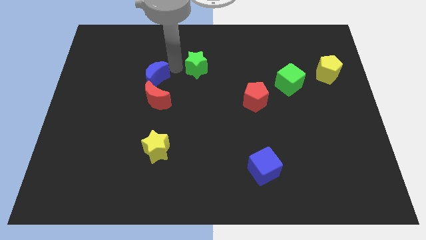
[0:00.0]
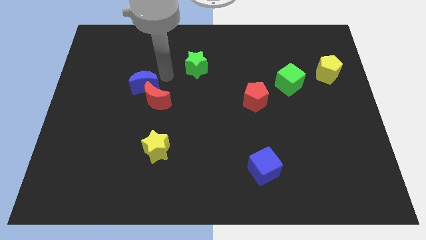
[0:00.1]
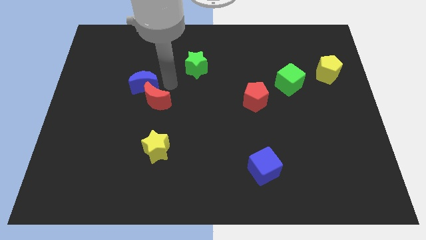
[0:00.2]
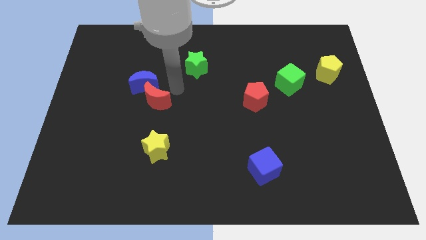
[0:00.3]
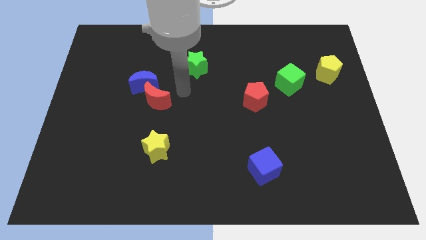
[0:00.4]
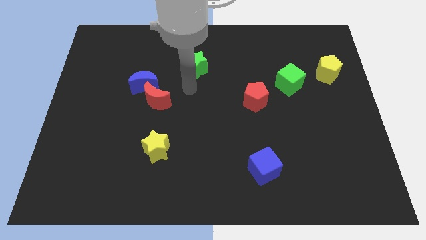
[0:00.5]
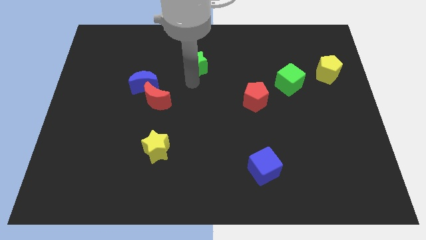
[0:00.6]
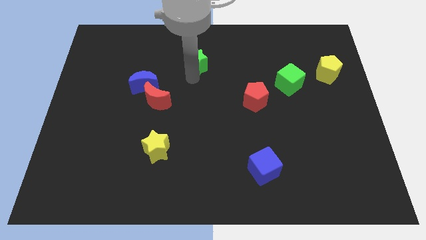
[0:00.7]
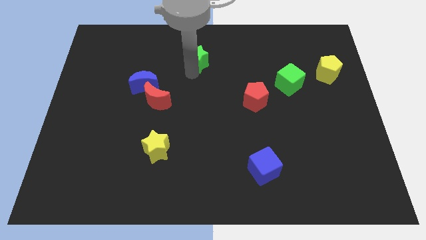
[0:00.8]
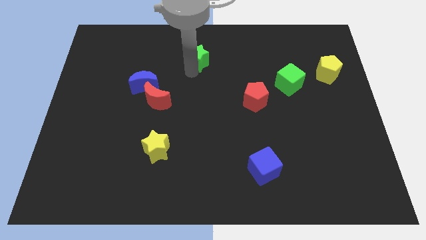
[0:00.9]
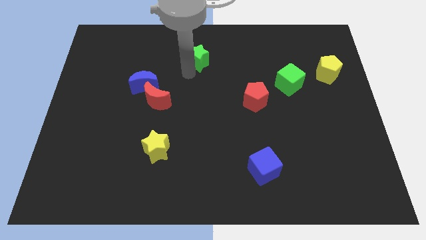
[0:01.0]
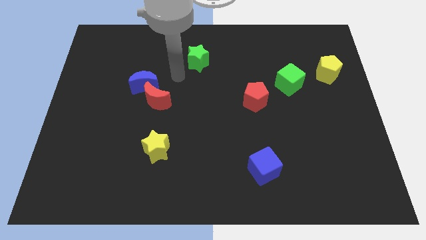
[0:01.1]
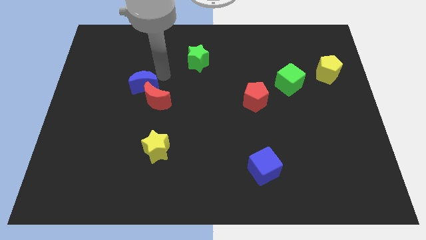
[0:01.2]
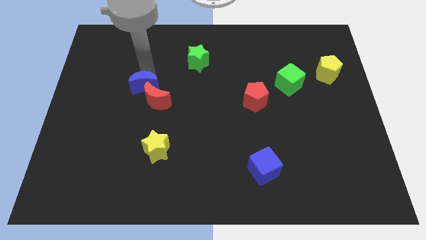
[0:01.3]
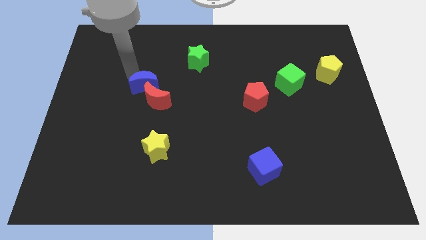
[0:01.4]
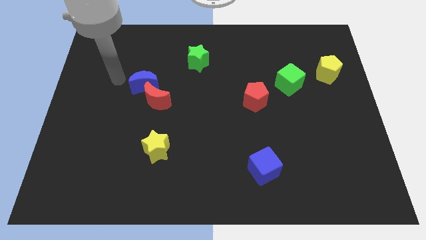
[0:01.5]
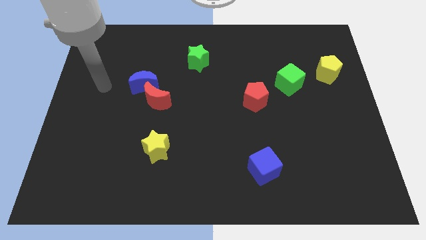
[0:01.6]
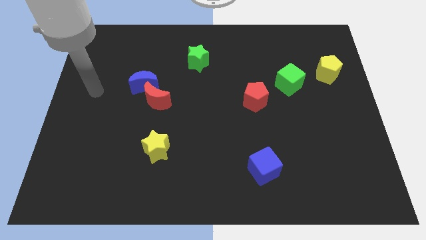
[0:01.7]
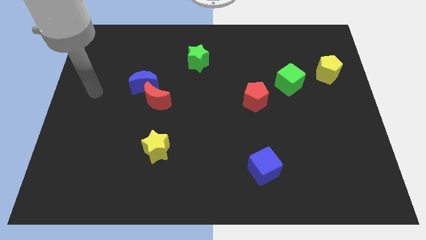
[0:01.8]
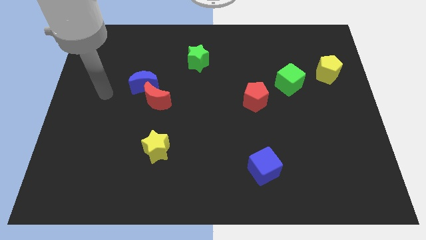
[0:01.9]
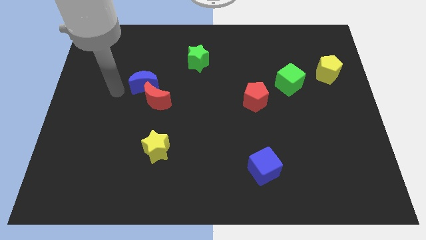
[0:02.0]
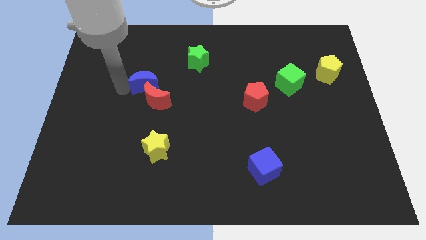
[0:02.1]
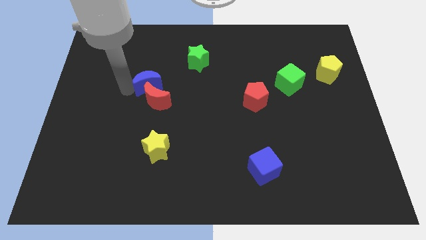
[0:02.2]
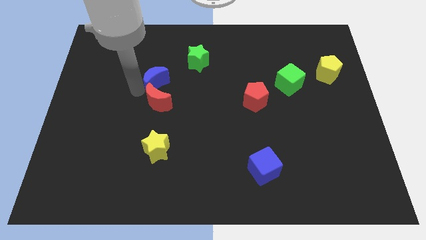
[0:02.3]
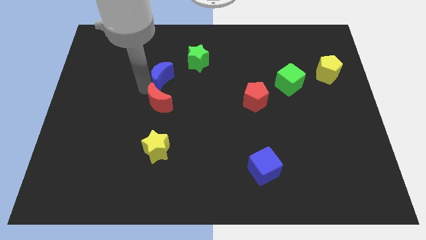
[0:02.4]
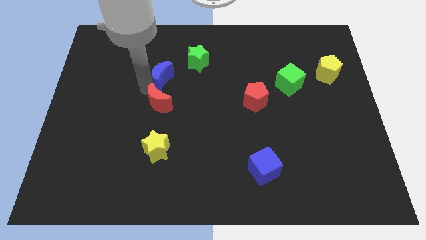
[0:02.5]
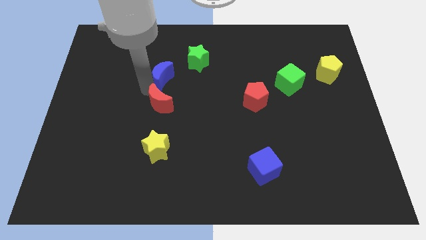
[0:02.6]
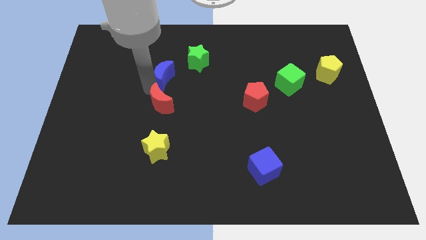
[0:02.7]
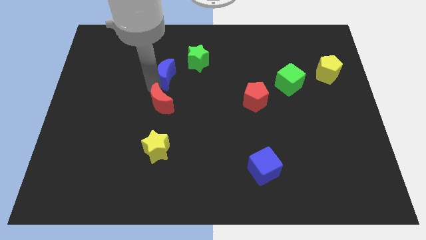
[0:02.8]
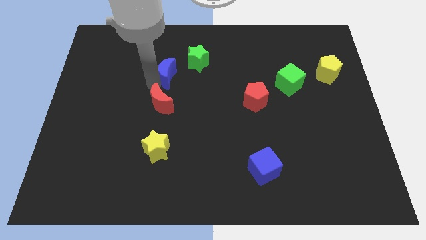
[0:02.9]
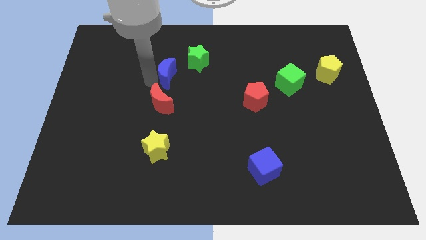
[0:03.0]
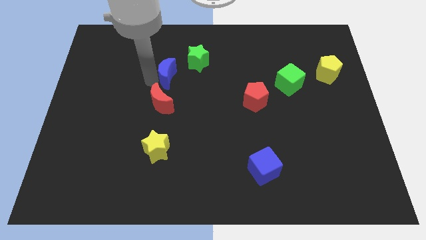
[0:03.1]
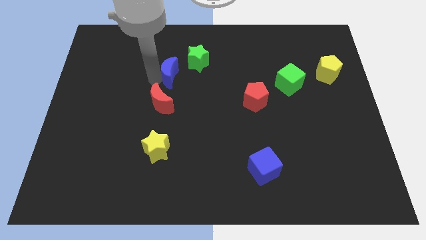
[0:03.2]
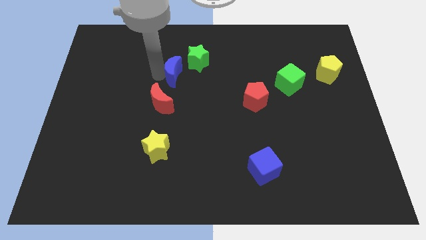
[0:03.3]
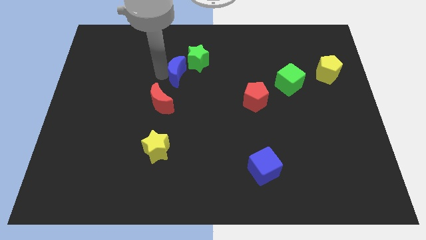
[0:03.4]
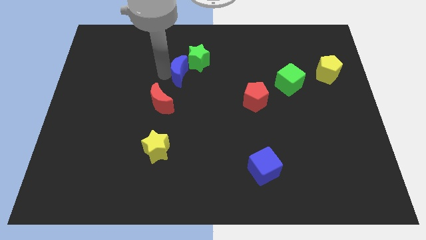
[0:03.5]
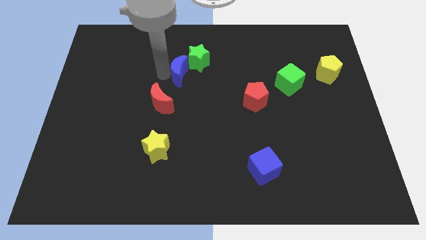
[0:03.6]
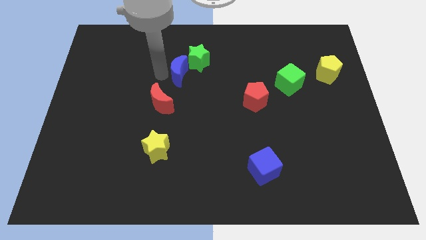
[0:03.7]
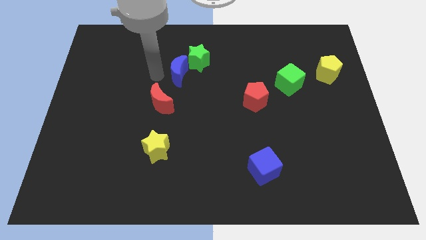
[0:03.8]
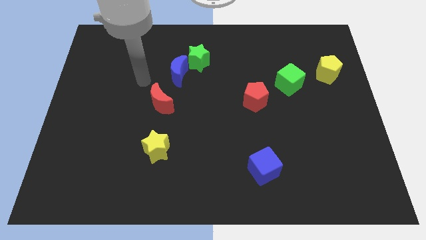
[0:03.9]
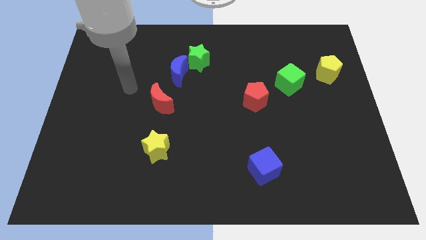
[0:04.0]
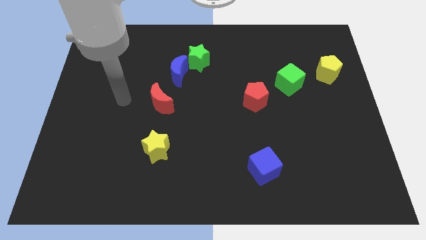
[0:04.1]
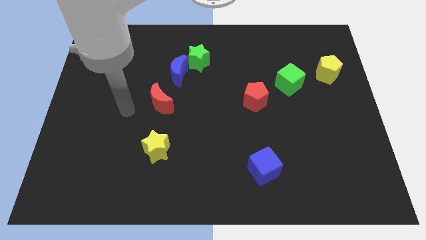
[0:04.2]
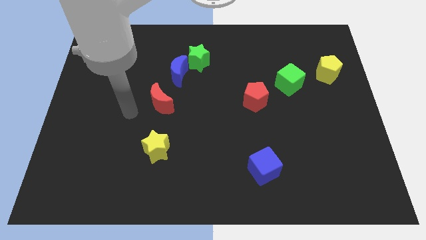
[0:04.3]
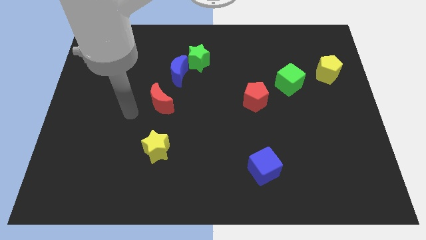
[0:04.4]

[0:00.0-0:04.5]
move the blue crescent right bottom of the green star

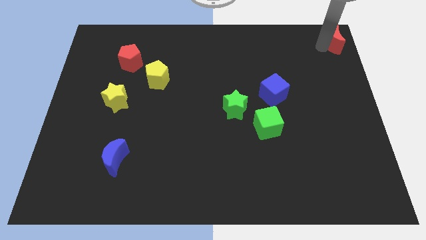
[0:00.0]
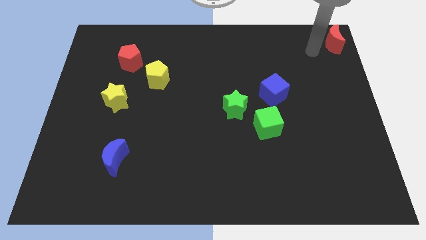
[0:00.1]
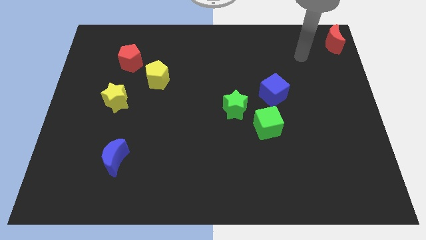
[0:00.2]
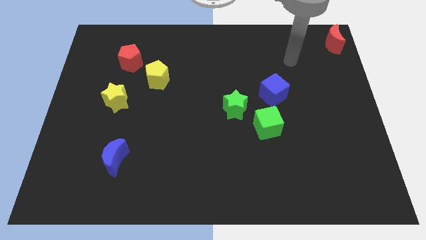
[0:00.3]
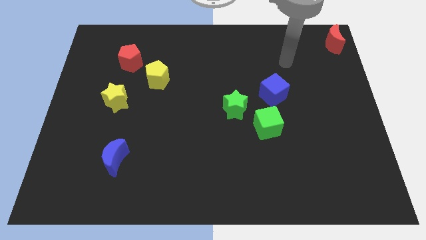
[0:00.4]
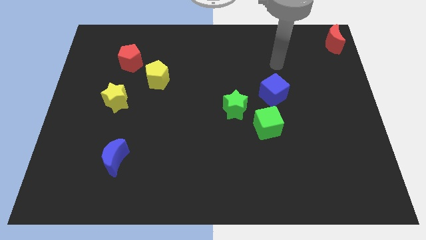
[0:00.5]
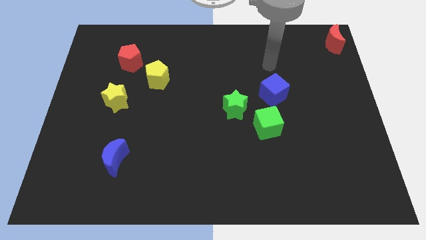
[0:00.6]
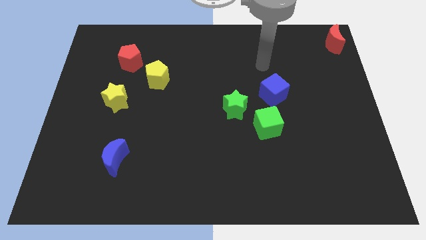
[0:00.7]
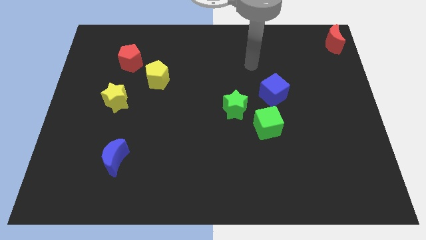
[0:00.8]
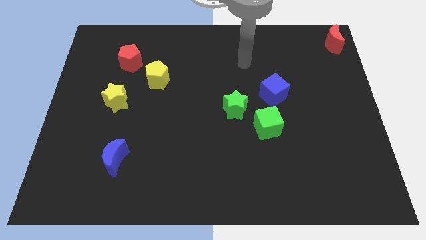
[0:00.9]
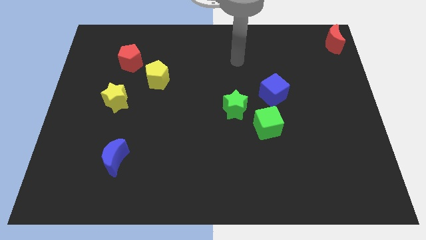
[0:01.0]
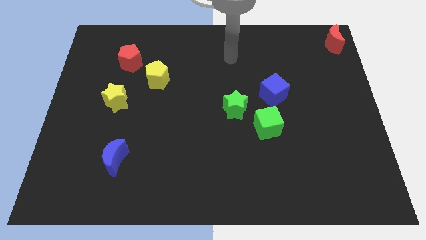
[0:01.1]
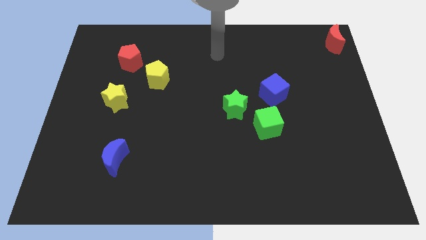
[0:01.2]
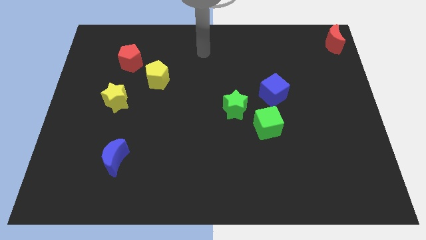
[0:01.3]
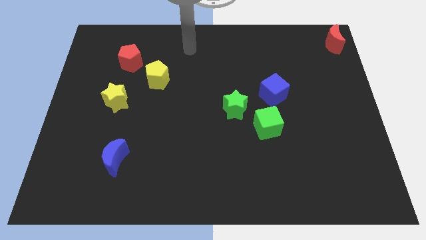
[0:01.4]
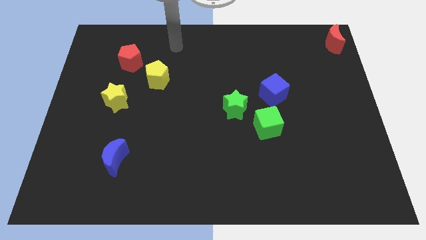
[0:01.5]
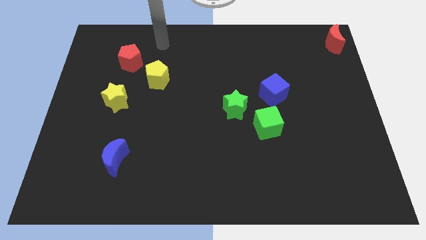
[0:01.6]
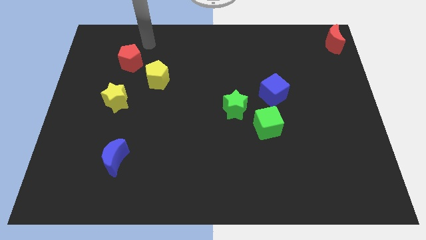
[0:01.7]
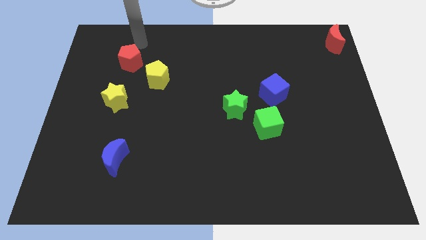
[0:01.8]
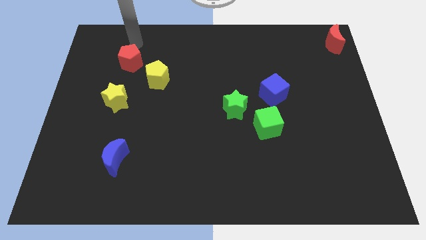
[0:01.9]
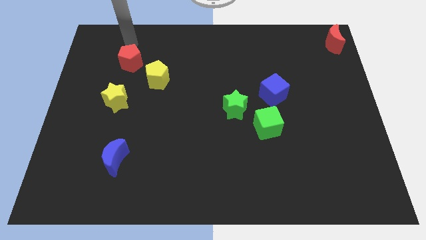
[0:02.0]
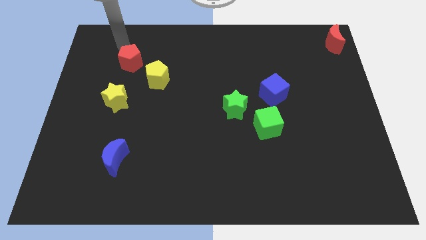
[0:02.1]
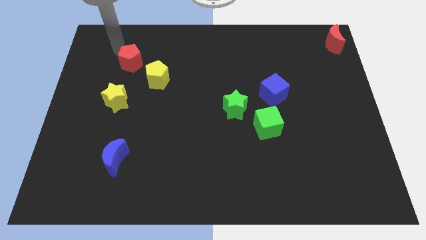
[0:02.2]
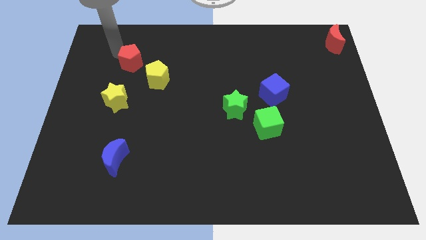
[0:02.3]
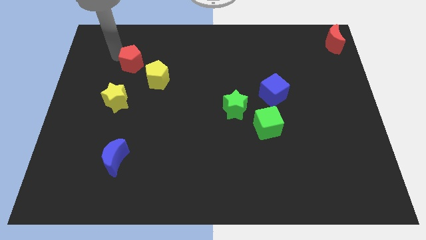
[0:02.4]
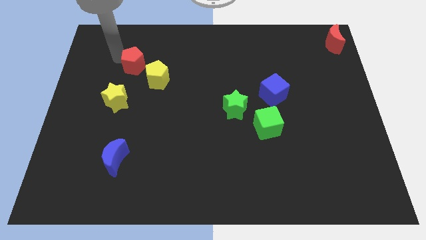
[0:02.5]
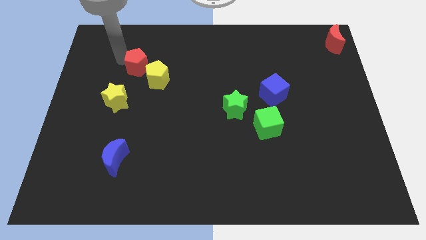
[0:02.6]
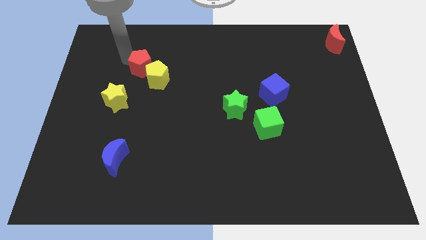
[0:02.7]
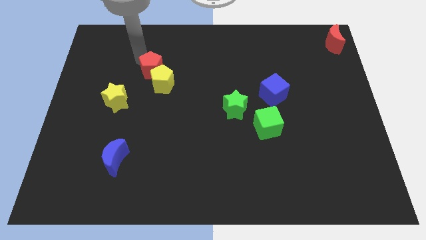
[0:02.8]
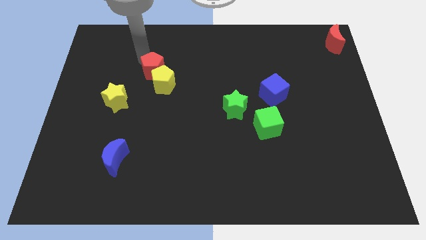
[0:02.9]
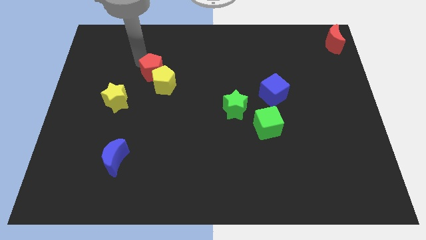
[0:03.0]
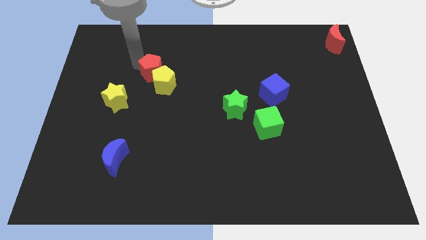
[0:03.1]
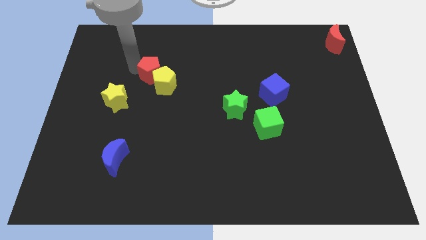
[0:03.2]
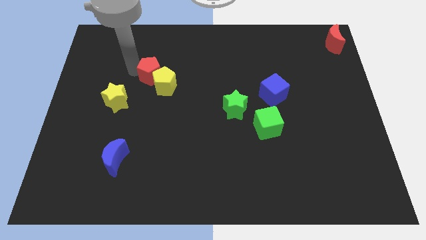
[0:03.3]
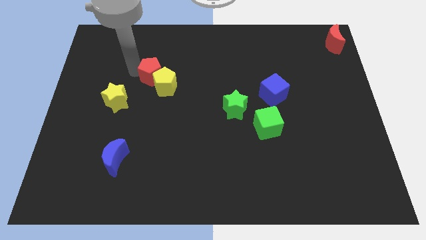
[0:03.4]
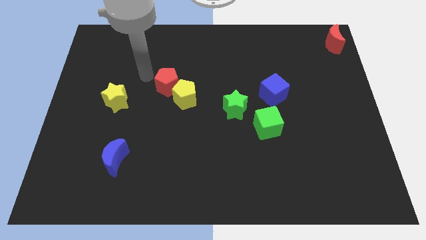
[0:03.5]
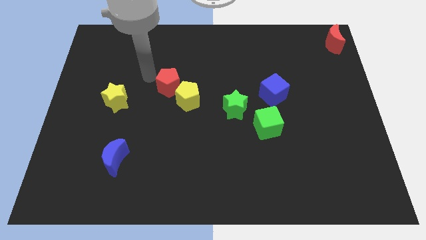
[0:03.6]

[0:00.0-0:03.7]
move the red pentagon into the yellow pentagon

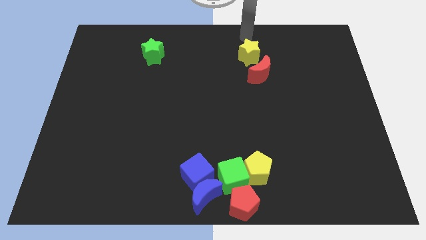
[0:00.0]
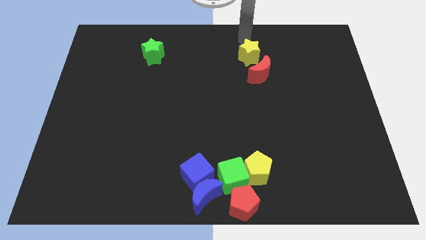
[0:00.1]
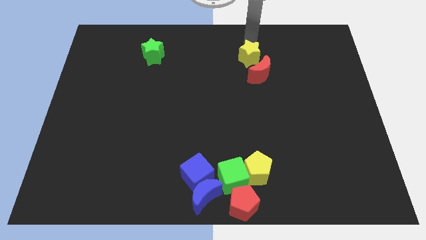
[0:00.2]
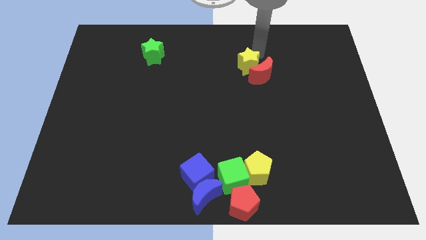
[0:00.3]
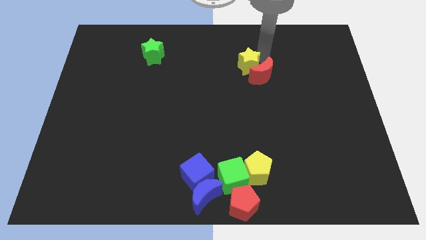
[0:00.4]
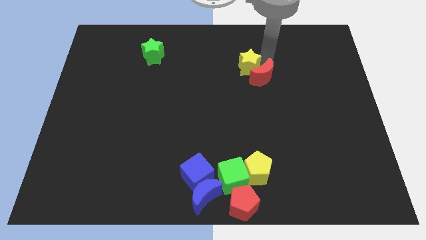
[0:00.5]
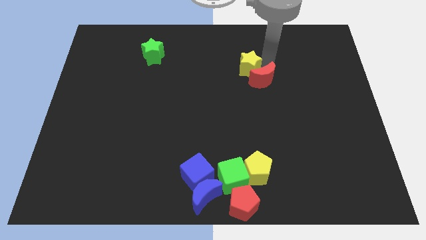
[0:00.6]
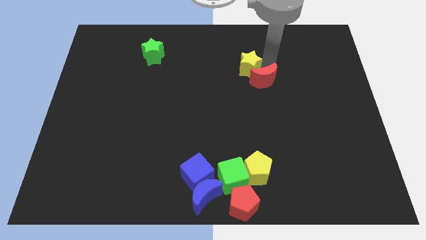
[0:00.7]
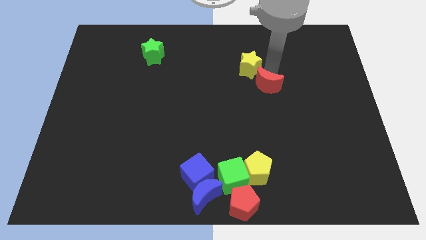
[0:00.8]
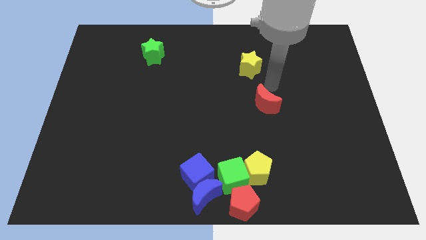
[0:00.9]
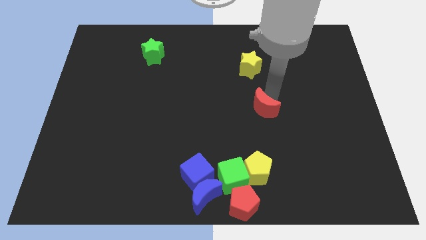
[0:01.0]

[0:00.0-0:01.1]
separate the red crescent and the yellow star
